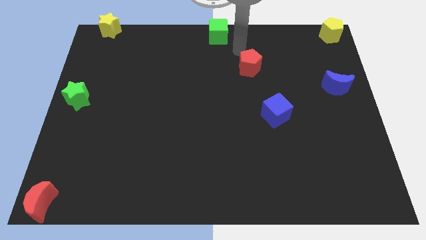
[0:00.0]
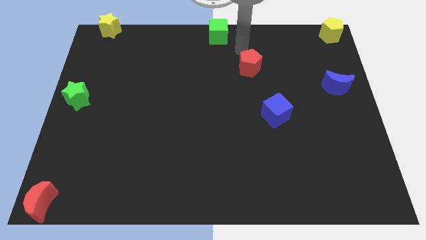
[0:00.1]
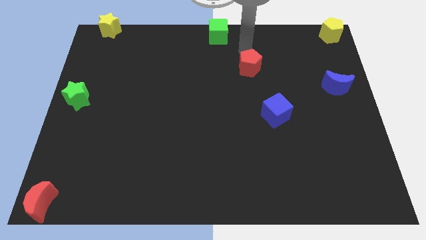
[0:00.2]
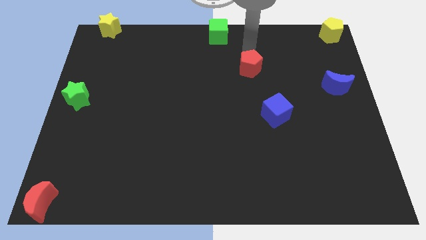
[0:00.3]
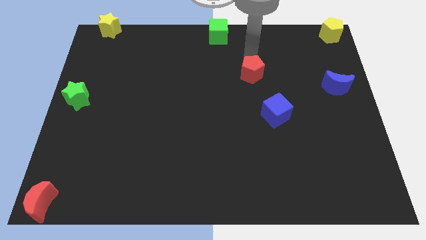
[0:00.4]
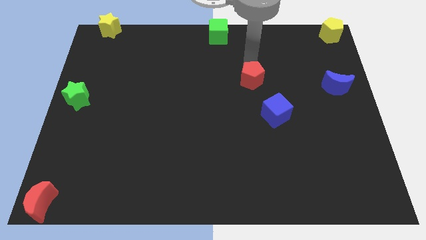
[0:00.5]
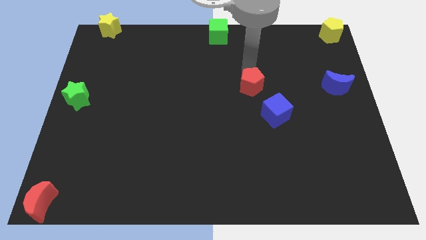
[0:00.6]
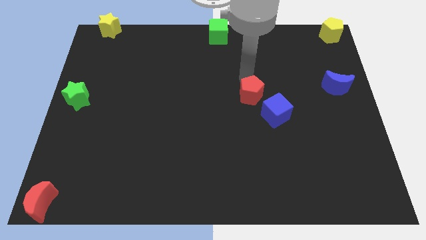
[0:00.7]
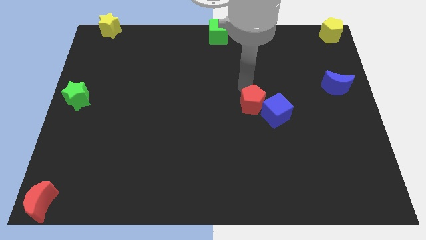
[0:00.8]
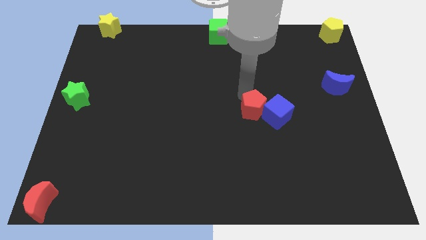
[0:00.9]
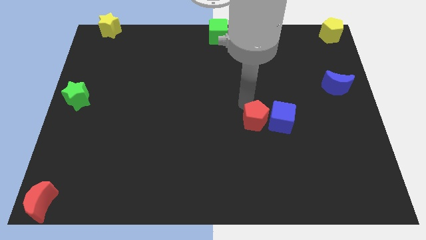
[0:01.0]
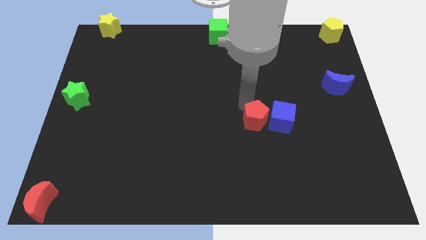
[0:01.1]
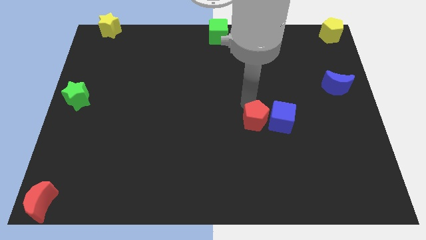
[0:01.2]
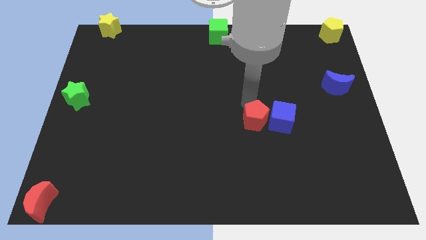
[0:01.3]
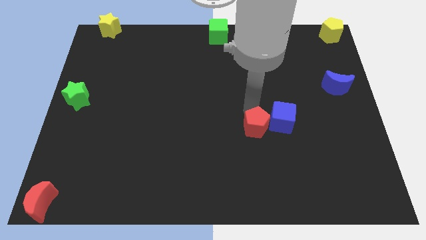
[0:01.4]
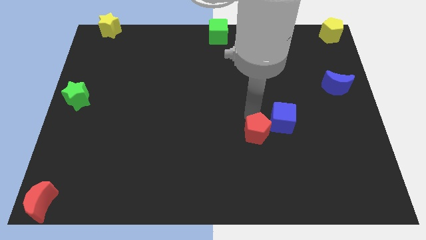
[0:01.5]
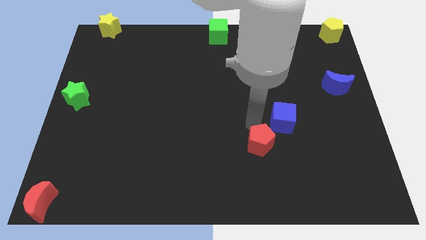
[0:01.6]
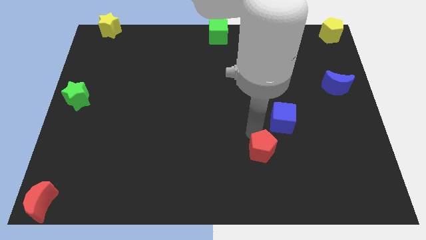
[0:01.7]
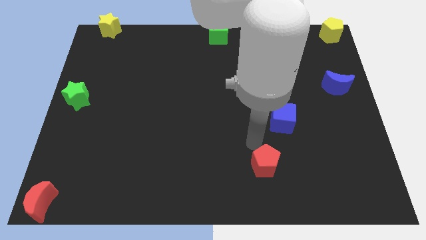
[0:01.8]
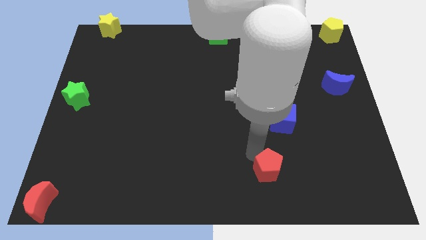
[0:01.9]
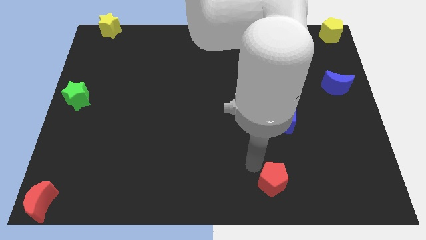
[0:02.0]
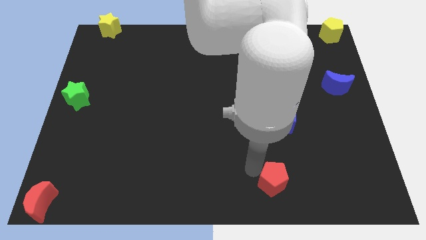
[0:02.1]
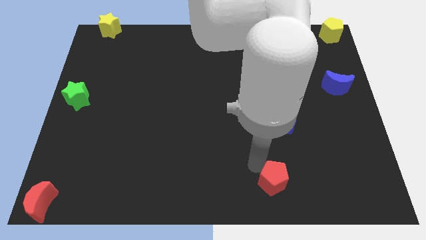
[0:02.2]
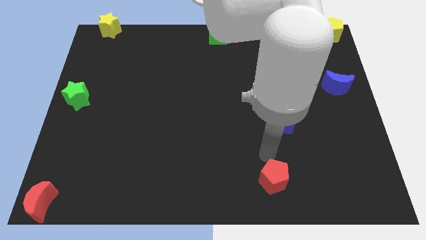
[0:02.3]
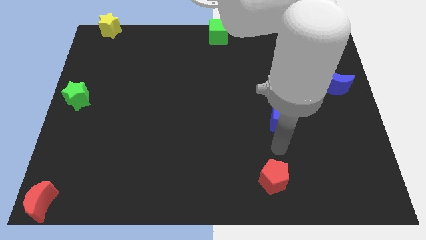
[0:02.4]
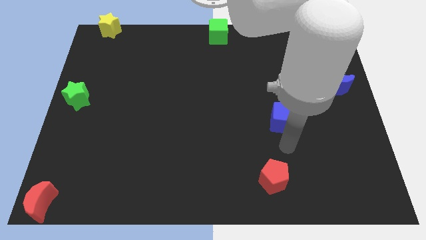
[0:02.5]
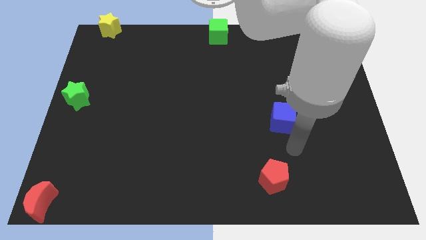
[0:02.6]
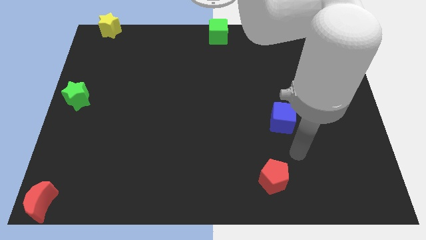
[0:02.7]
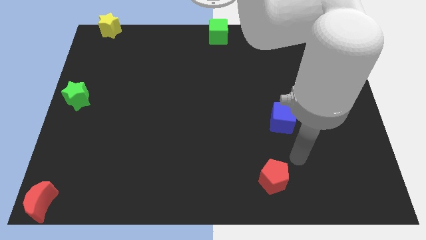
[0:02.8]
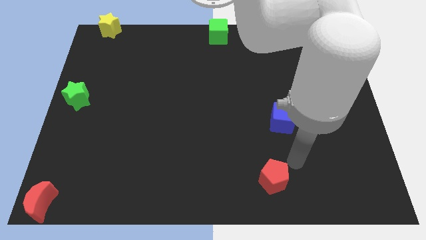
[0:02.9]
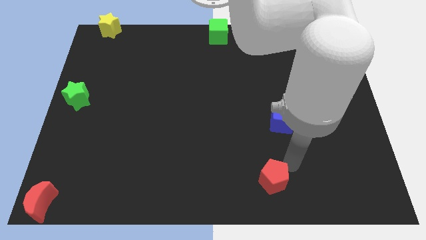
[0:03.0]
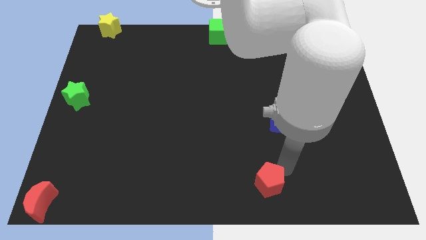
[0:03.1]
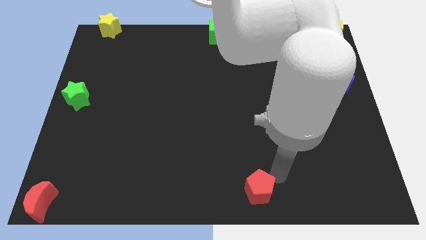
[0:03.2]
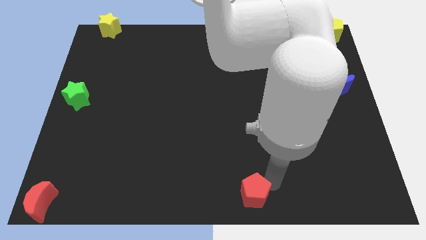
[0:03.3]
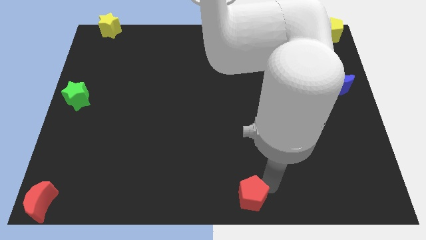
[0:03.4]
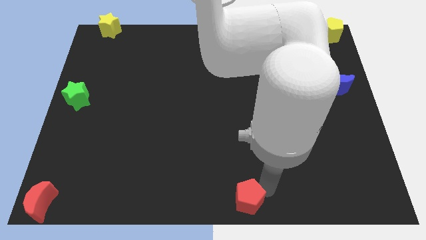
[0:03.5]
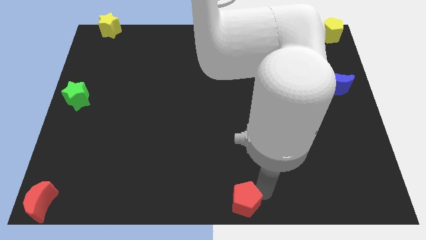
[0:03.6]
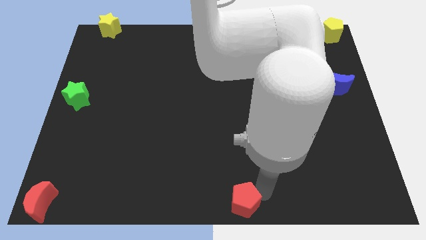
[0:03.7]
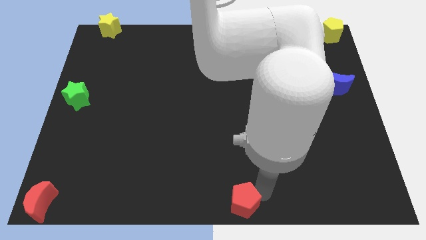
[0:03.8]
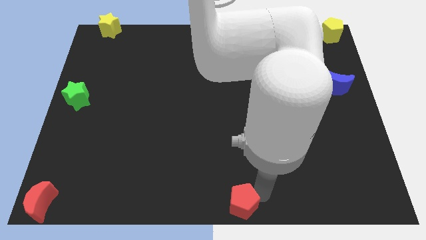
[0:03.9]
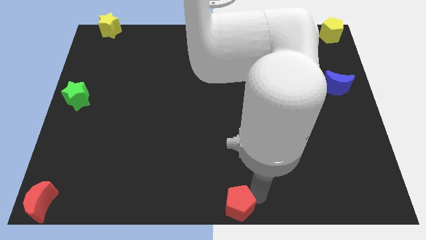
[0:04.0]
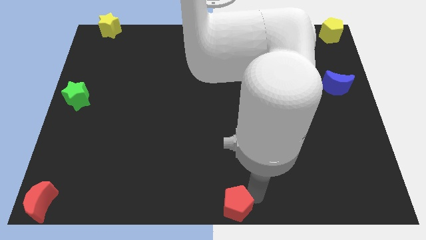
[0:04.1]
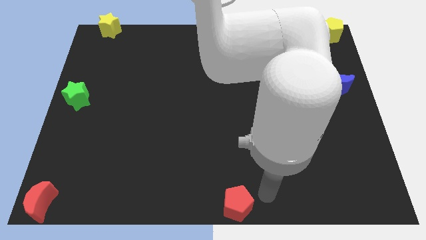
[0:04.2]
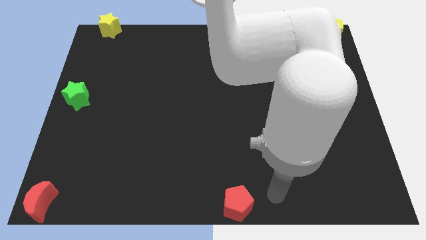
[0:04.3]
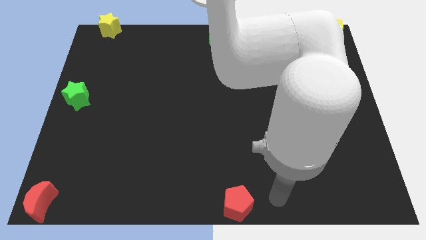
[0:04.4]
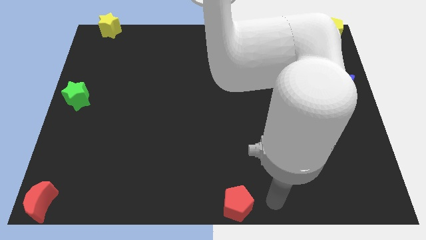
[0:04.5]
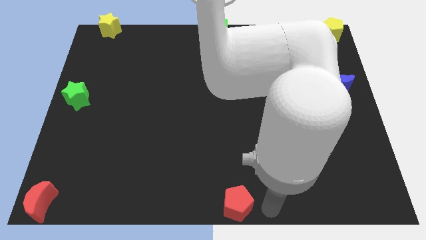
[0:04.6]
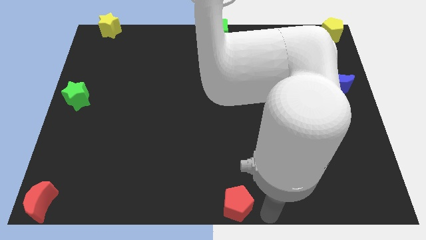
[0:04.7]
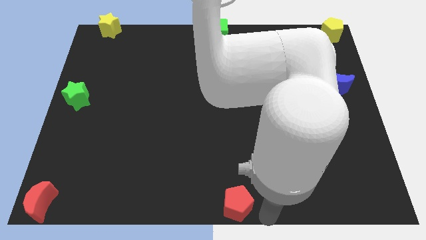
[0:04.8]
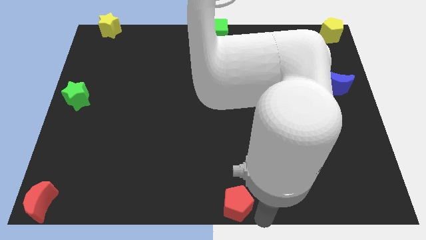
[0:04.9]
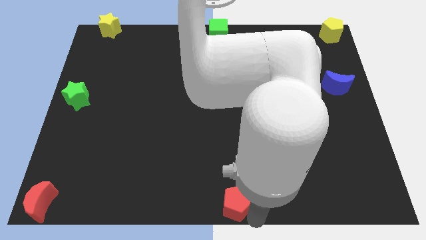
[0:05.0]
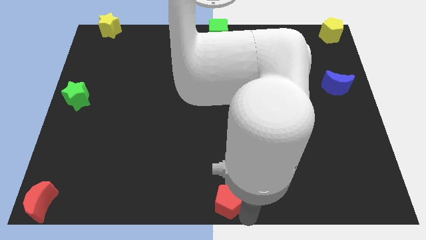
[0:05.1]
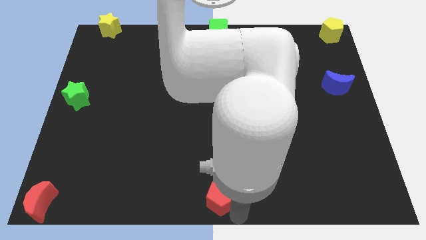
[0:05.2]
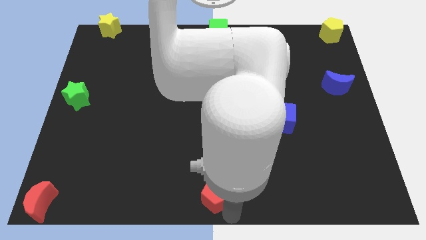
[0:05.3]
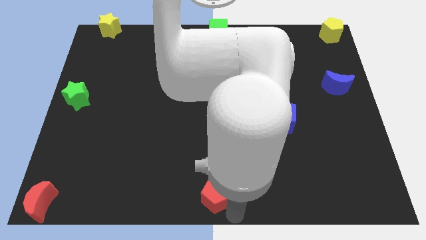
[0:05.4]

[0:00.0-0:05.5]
place the red pentagon at the bottom center of the board

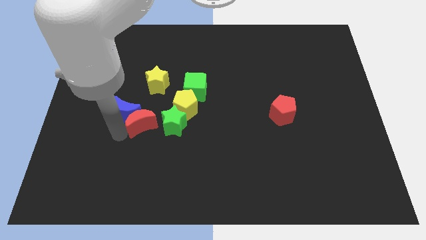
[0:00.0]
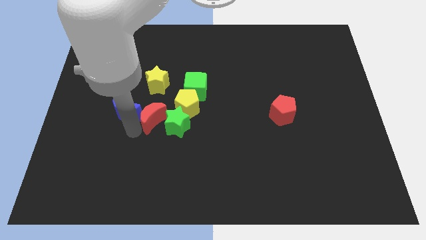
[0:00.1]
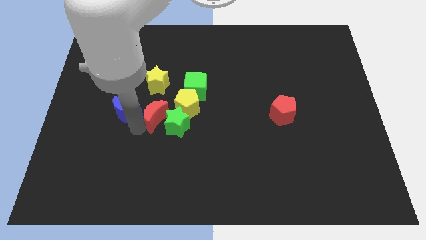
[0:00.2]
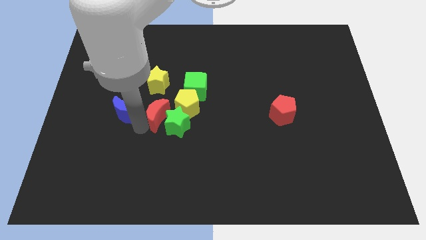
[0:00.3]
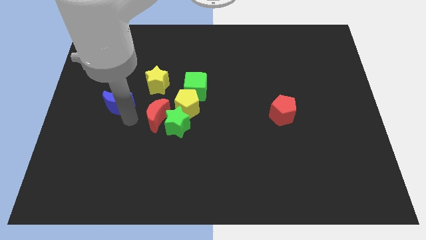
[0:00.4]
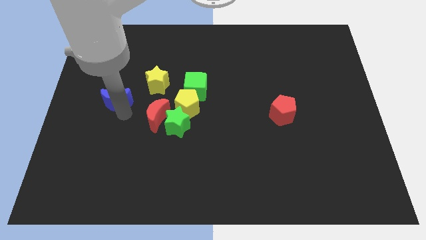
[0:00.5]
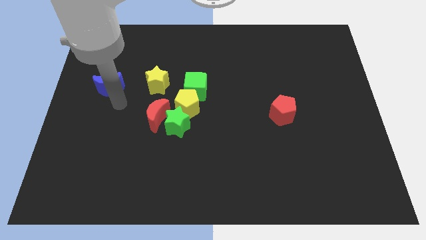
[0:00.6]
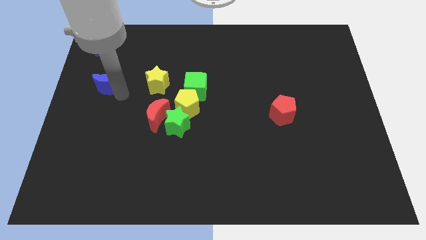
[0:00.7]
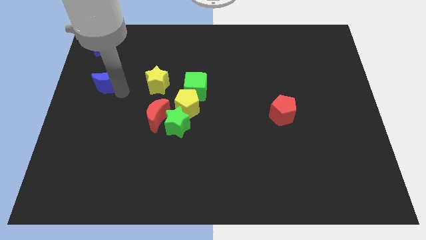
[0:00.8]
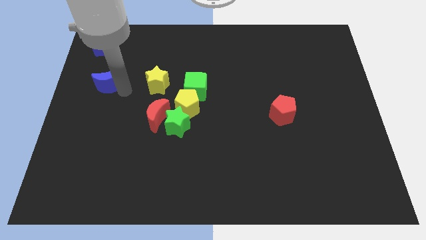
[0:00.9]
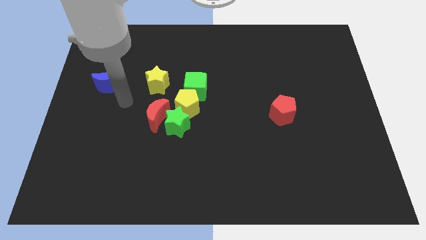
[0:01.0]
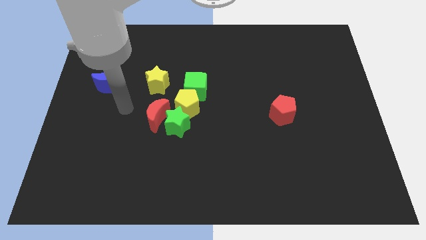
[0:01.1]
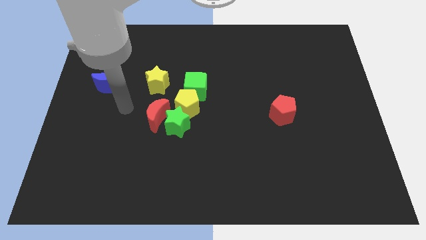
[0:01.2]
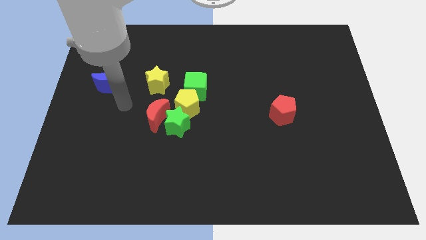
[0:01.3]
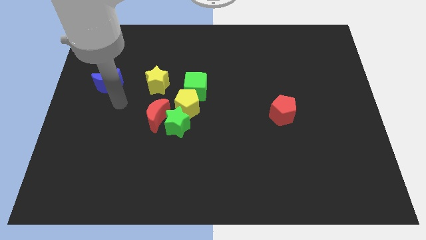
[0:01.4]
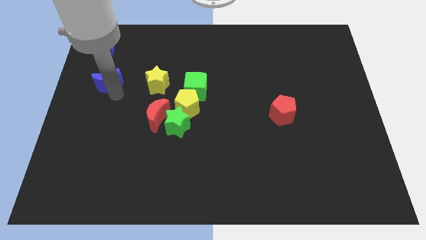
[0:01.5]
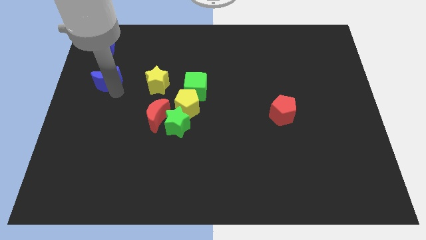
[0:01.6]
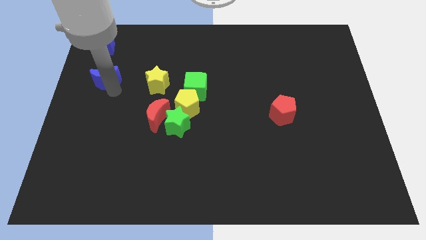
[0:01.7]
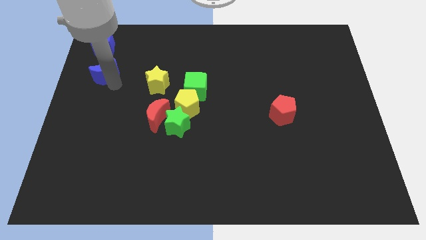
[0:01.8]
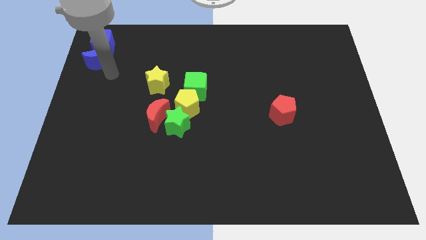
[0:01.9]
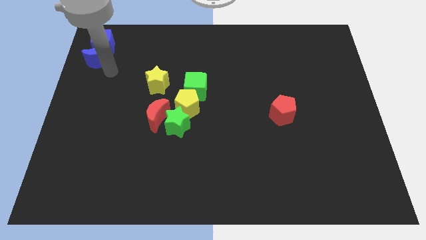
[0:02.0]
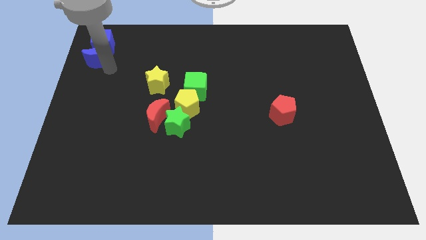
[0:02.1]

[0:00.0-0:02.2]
push blue moon to the top left of the blue cube

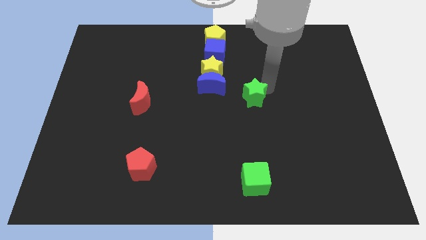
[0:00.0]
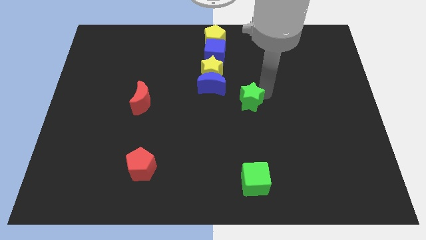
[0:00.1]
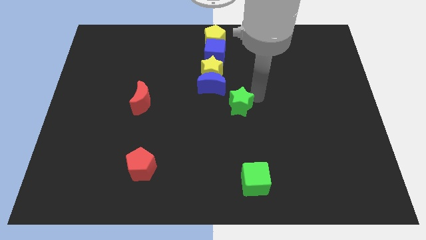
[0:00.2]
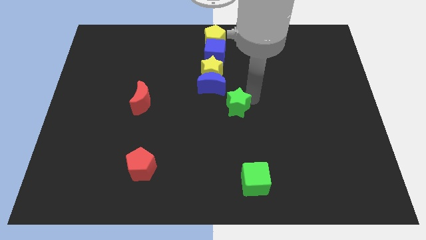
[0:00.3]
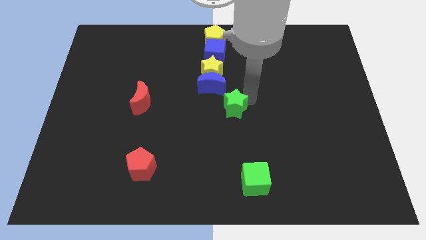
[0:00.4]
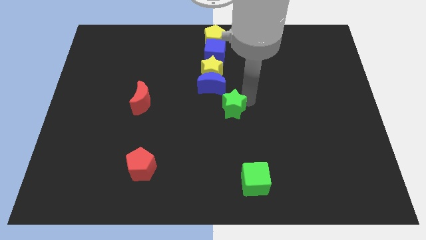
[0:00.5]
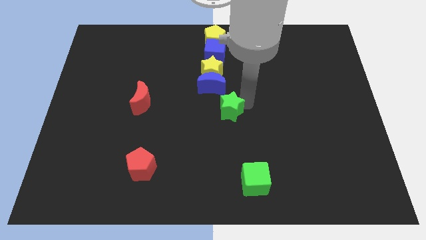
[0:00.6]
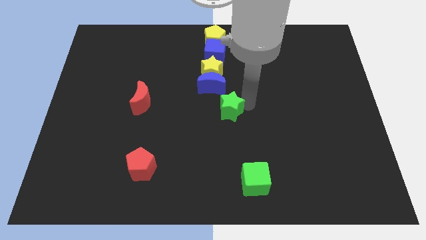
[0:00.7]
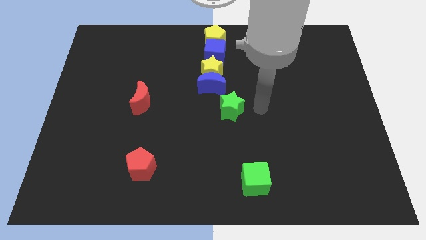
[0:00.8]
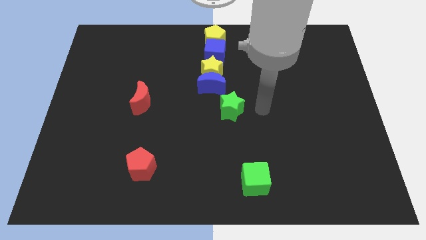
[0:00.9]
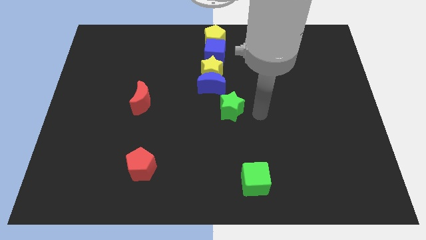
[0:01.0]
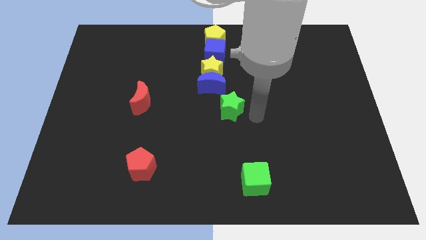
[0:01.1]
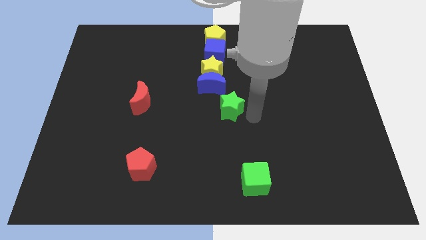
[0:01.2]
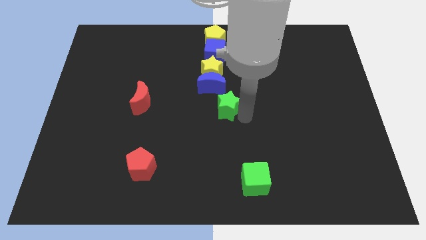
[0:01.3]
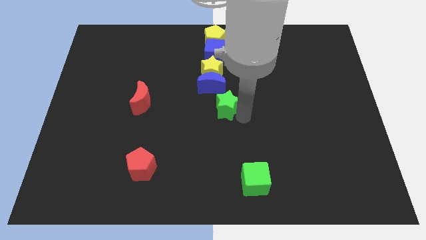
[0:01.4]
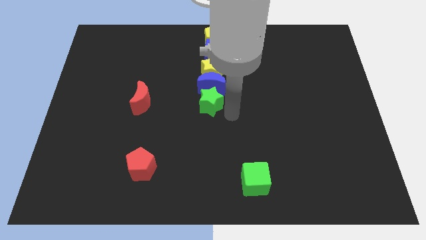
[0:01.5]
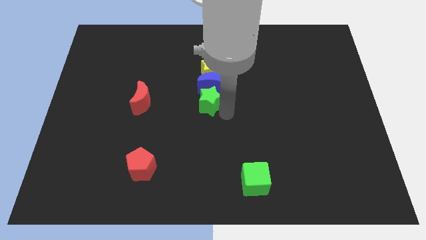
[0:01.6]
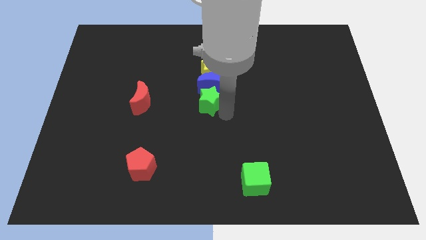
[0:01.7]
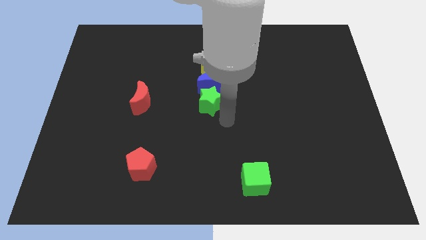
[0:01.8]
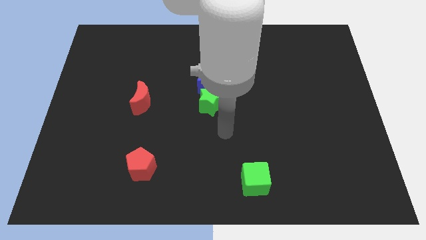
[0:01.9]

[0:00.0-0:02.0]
push the green star below the blue moon
